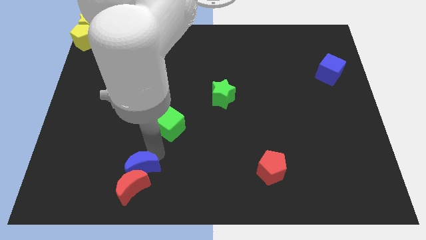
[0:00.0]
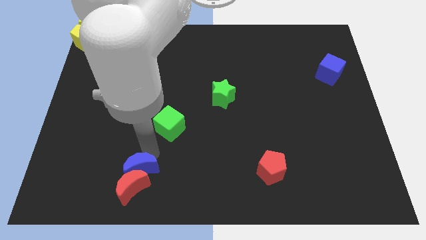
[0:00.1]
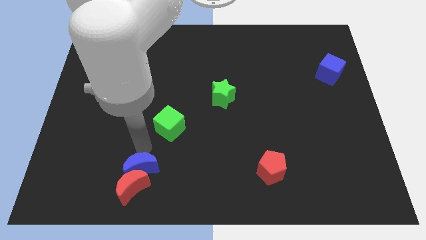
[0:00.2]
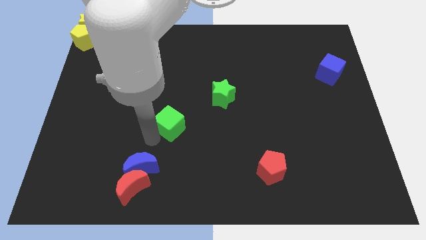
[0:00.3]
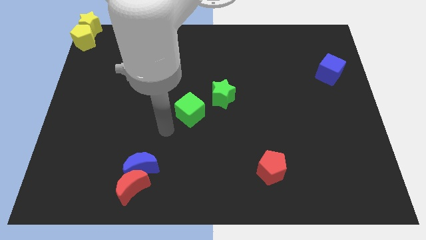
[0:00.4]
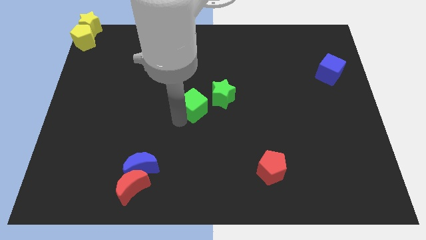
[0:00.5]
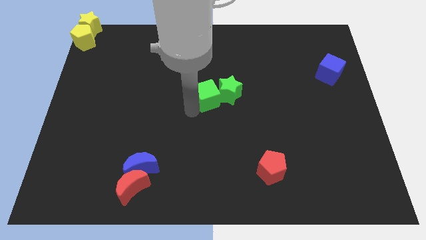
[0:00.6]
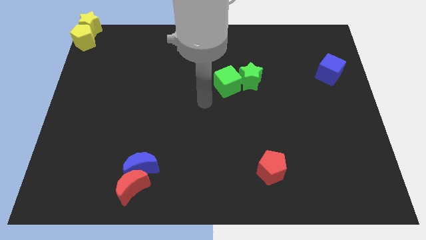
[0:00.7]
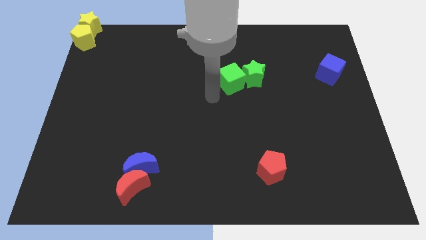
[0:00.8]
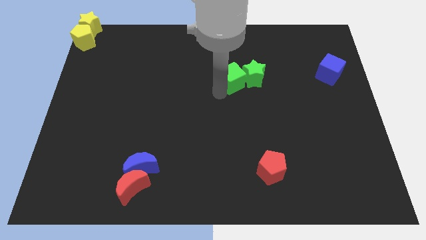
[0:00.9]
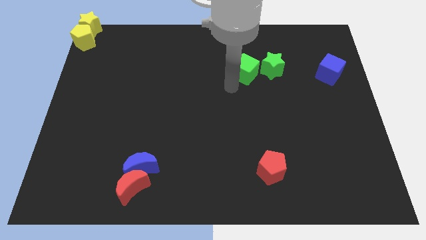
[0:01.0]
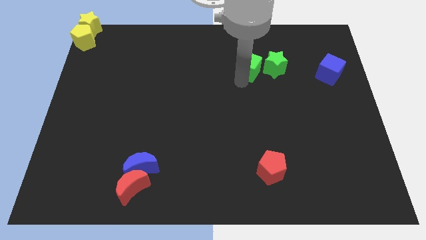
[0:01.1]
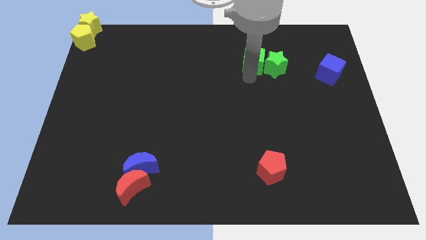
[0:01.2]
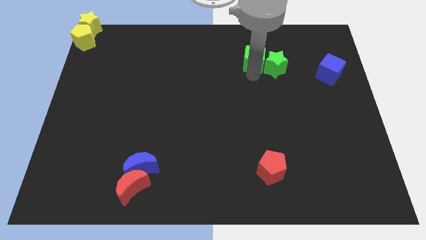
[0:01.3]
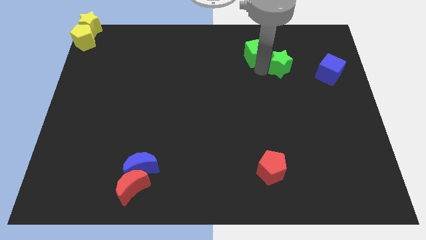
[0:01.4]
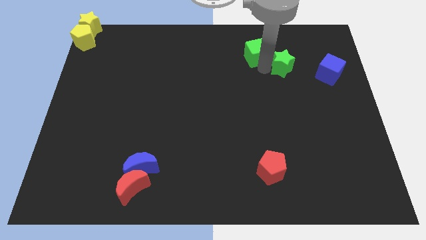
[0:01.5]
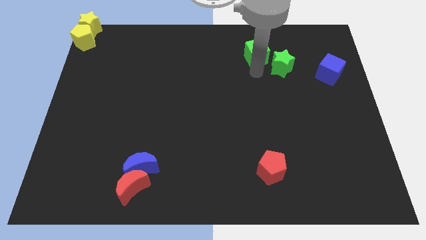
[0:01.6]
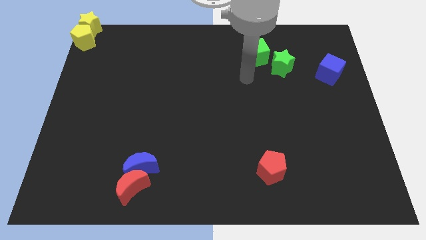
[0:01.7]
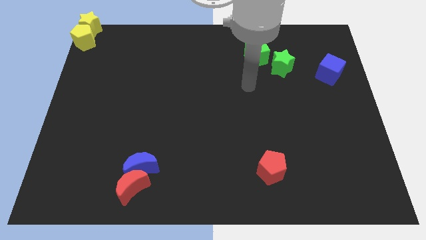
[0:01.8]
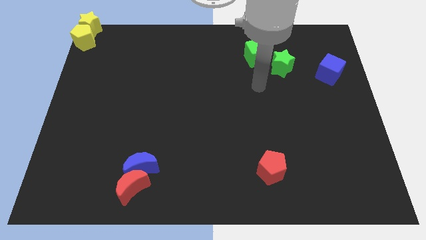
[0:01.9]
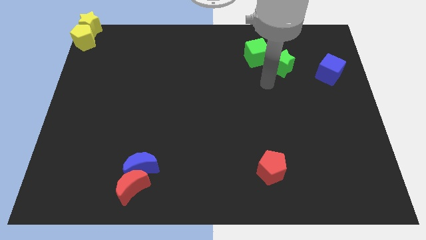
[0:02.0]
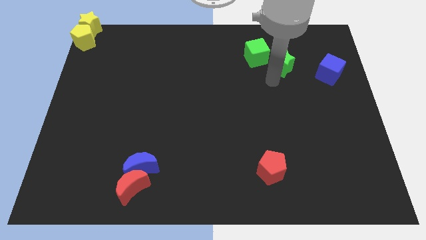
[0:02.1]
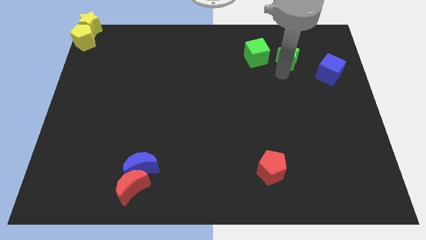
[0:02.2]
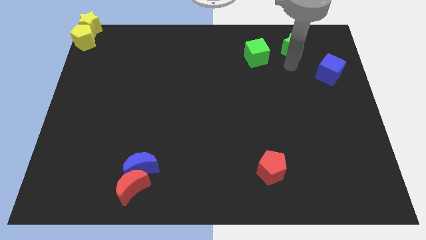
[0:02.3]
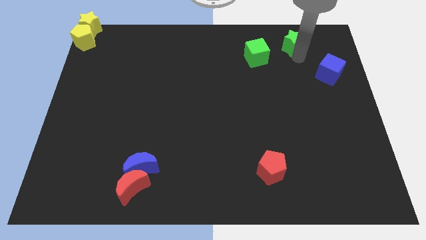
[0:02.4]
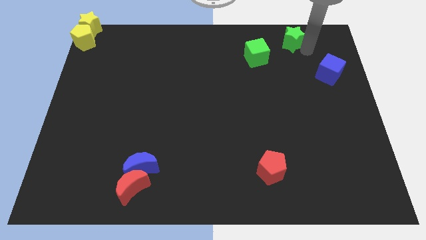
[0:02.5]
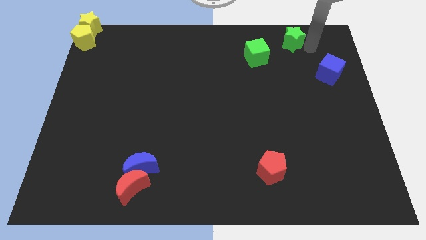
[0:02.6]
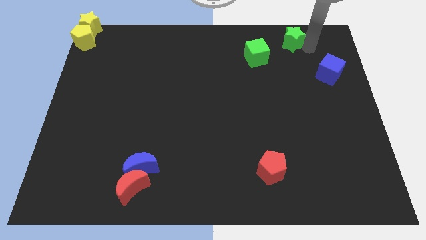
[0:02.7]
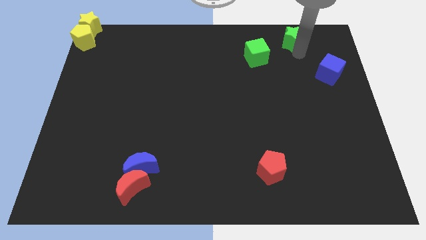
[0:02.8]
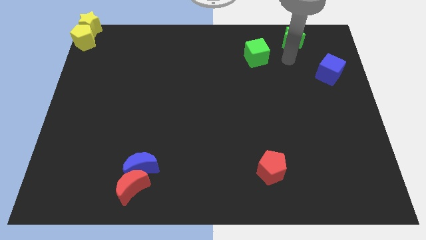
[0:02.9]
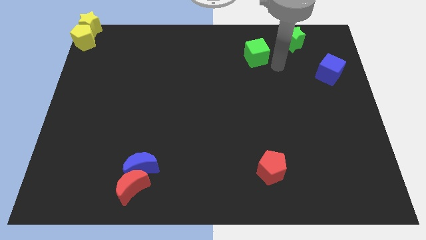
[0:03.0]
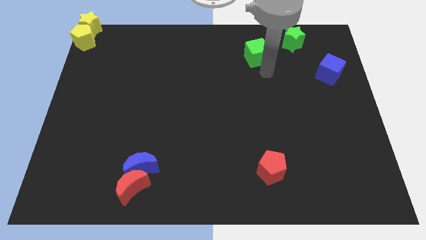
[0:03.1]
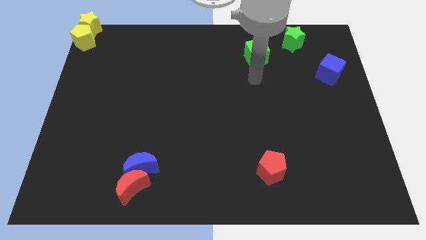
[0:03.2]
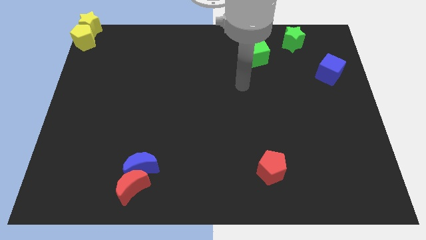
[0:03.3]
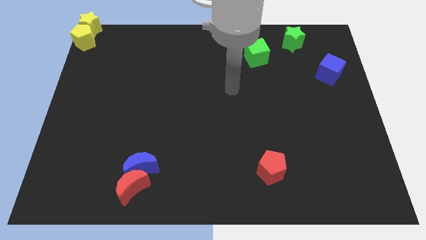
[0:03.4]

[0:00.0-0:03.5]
push the green cube into the green star

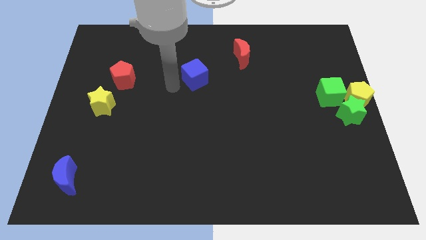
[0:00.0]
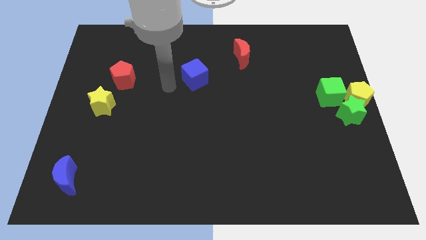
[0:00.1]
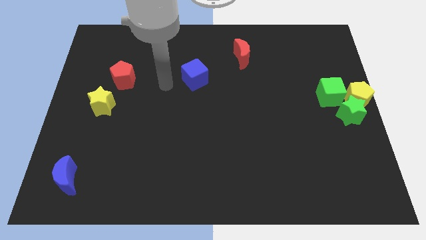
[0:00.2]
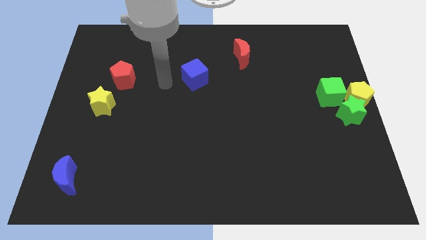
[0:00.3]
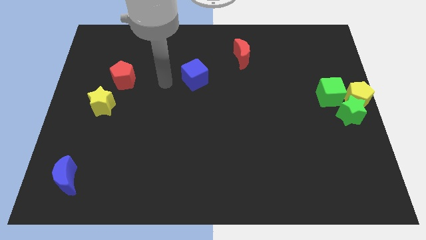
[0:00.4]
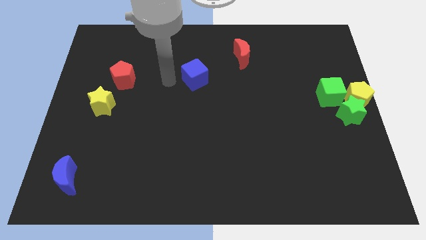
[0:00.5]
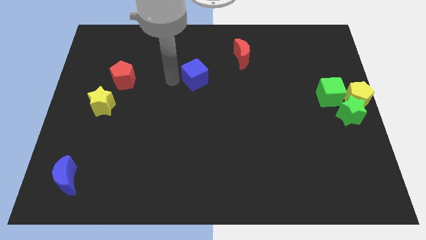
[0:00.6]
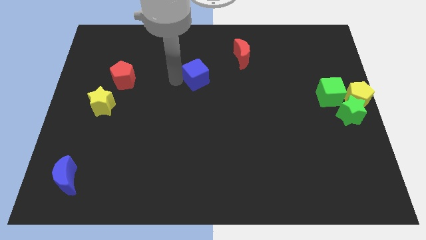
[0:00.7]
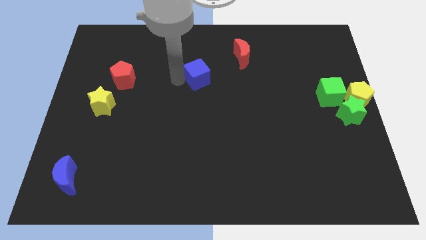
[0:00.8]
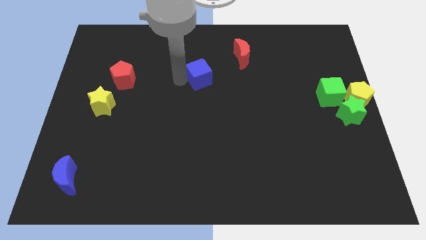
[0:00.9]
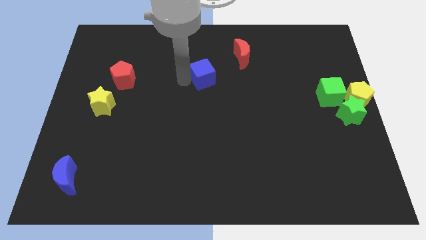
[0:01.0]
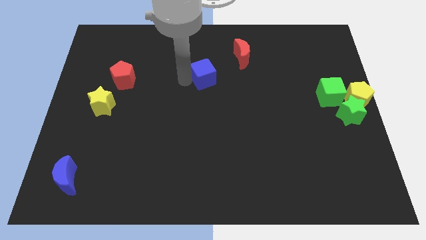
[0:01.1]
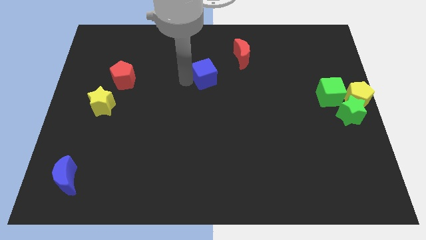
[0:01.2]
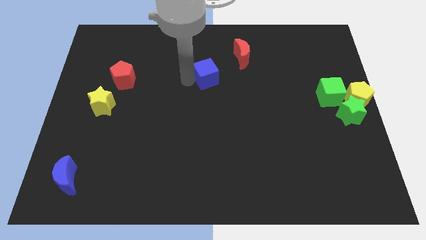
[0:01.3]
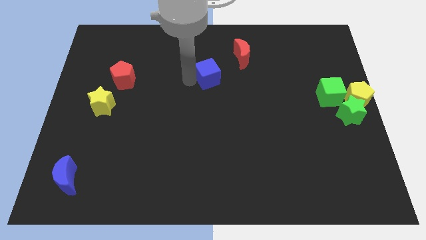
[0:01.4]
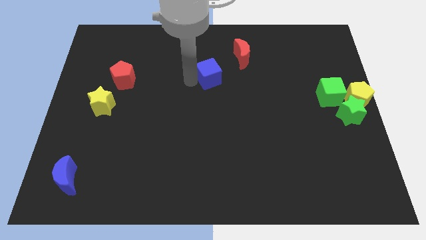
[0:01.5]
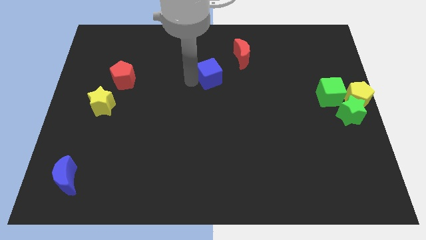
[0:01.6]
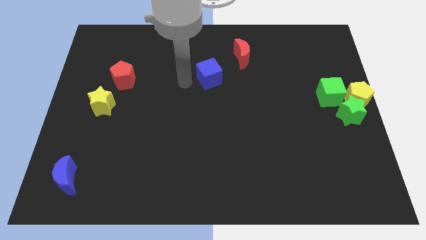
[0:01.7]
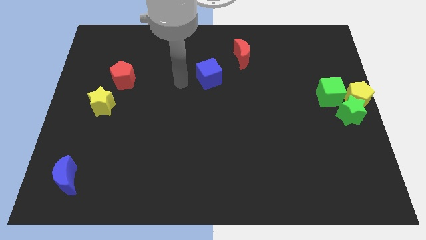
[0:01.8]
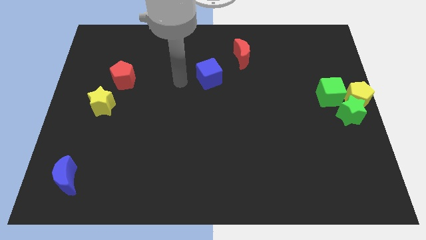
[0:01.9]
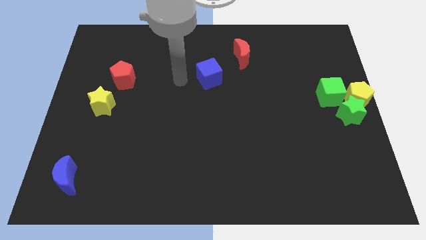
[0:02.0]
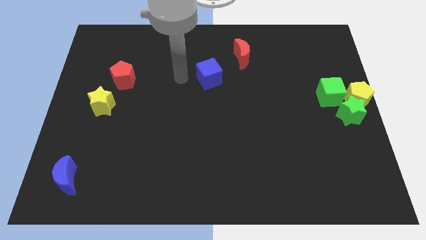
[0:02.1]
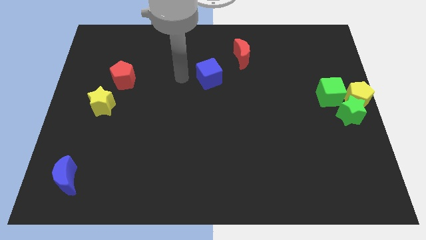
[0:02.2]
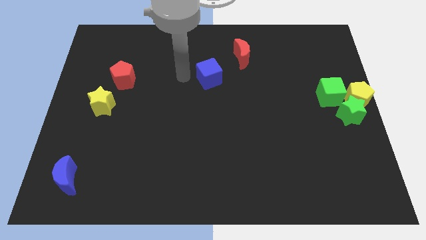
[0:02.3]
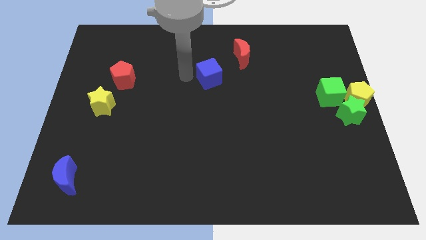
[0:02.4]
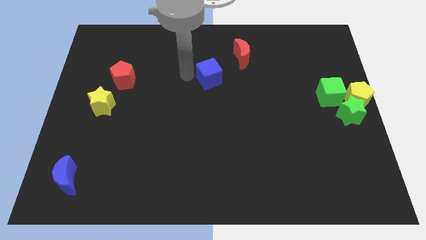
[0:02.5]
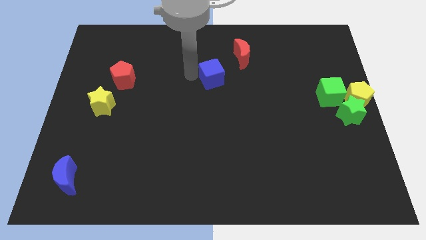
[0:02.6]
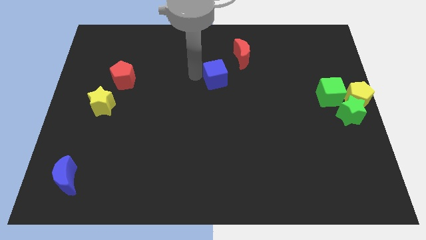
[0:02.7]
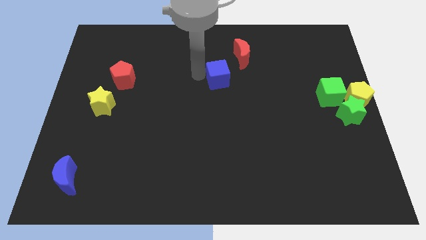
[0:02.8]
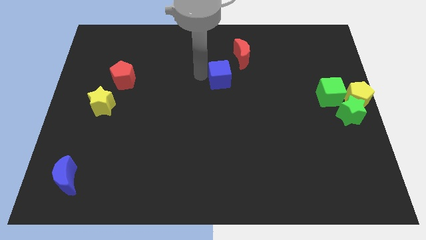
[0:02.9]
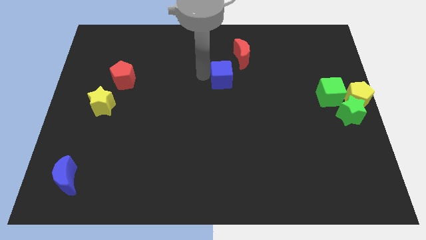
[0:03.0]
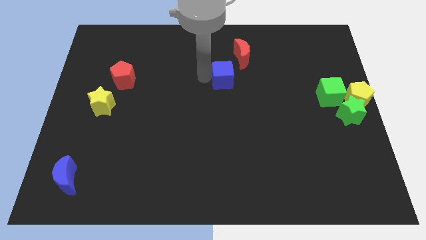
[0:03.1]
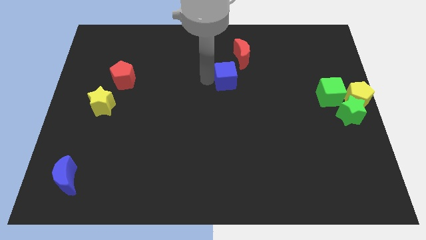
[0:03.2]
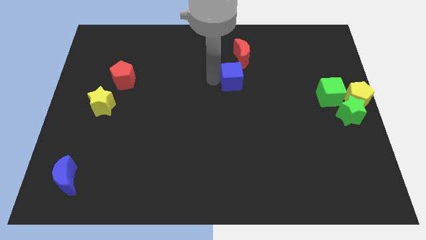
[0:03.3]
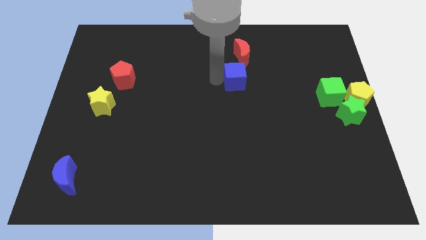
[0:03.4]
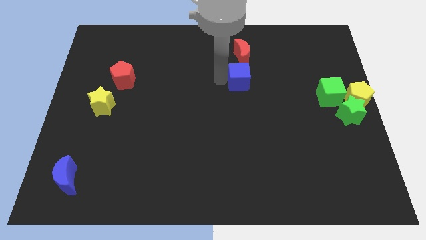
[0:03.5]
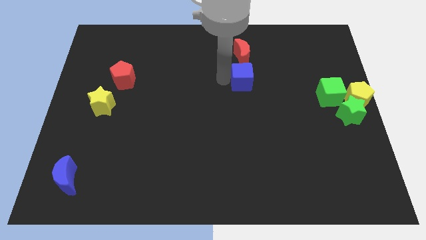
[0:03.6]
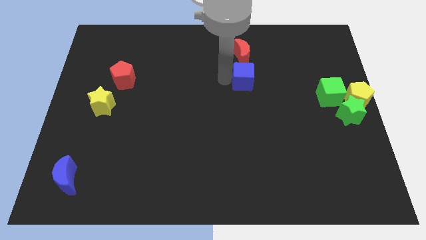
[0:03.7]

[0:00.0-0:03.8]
push the blue cube below to the red moon

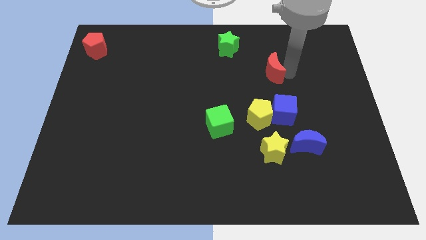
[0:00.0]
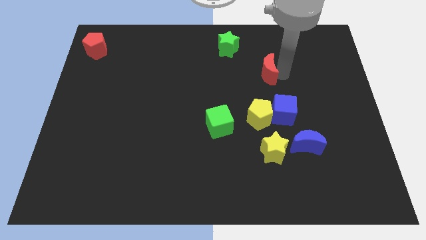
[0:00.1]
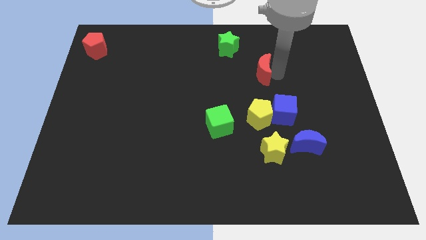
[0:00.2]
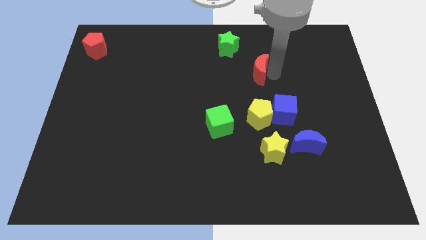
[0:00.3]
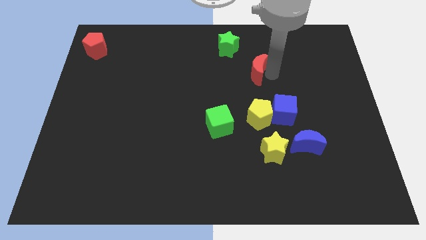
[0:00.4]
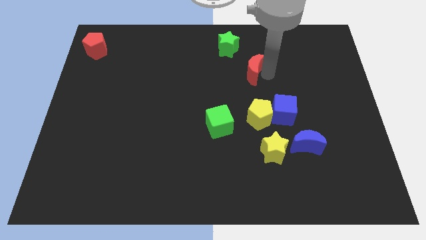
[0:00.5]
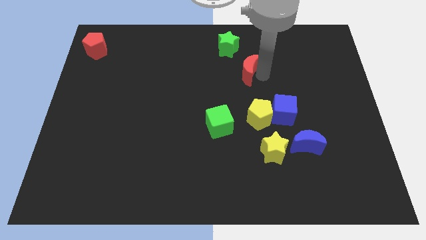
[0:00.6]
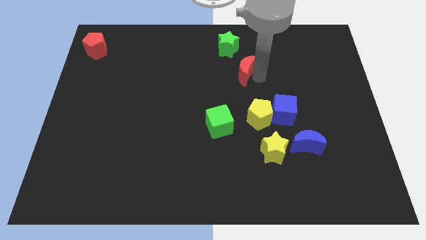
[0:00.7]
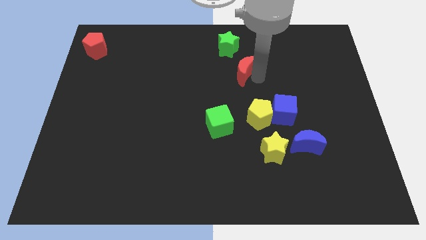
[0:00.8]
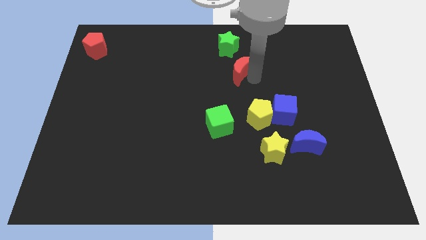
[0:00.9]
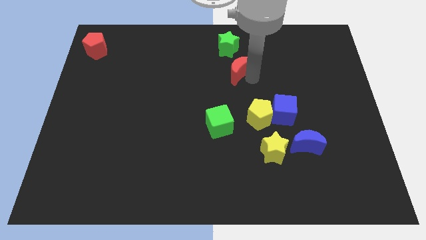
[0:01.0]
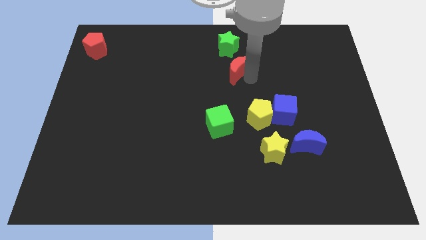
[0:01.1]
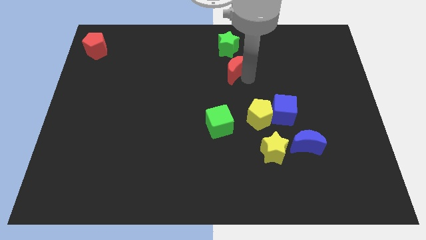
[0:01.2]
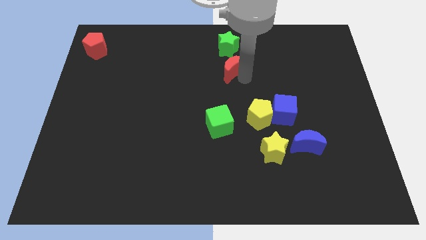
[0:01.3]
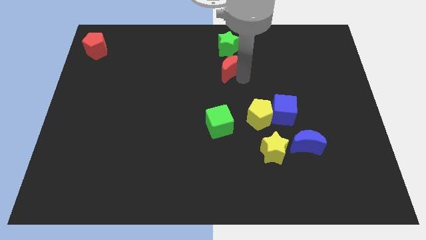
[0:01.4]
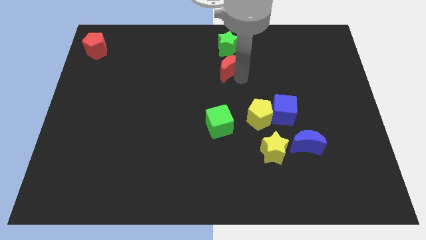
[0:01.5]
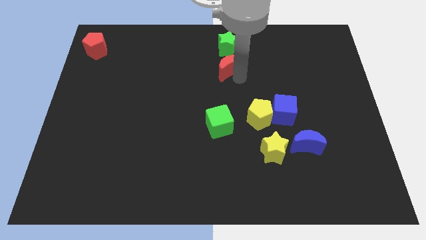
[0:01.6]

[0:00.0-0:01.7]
push the red crescent to the bottom of the green star

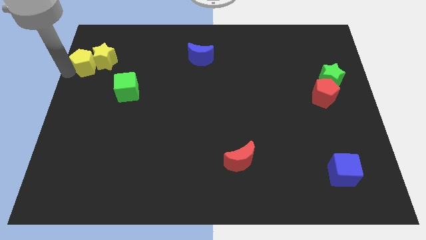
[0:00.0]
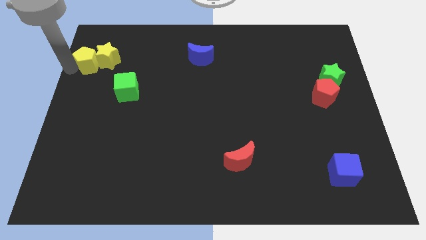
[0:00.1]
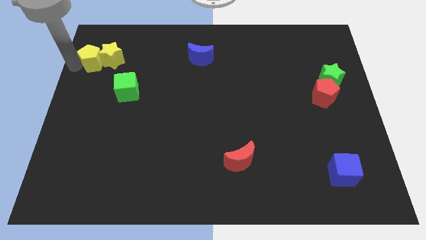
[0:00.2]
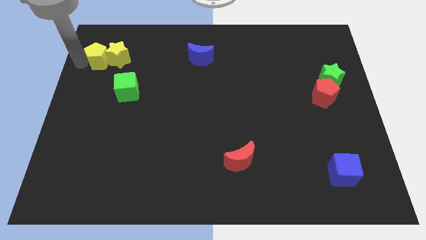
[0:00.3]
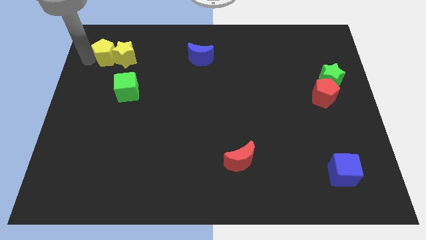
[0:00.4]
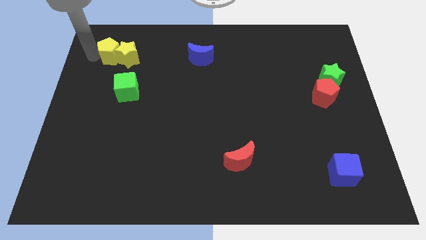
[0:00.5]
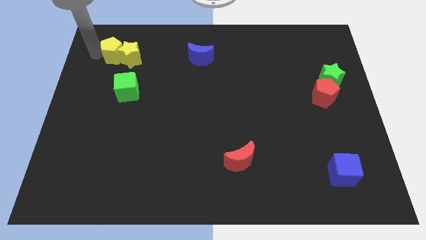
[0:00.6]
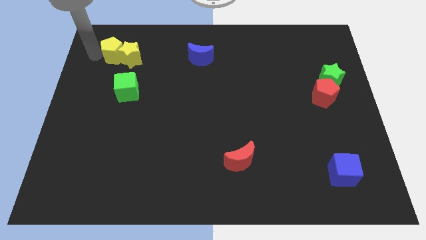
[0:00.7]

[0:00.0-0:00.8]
push the yellow pentagon into yellow star
